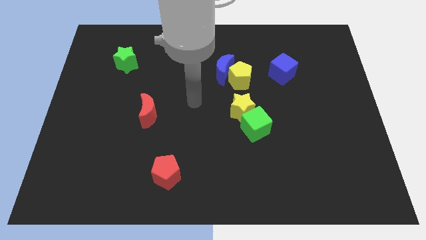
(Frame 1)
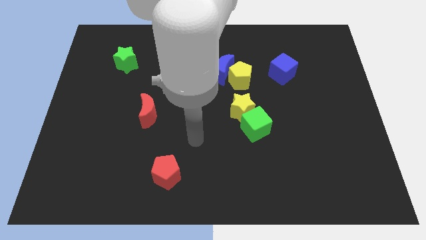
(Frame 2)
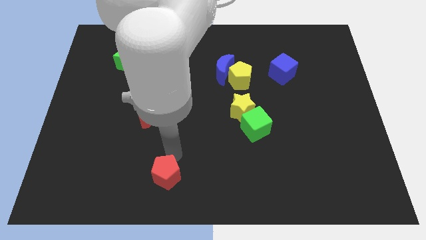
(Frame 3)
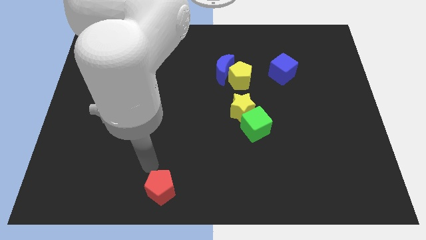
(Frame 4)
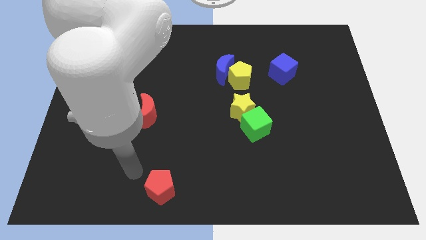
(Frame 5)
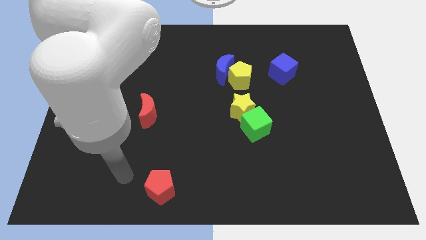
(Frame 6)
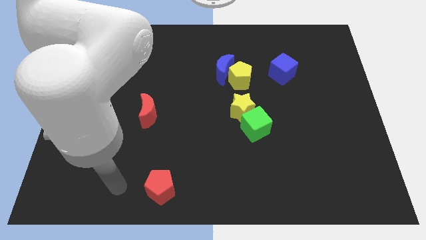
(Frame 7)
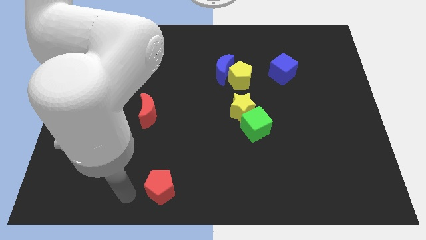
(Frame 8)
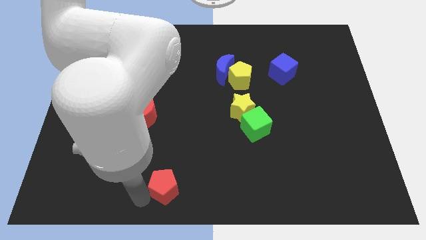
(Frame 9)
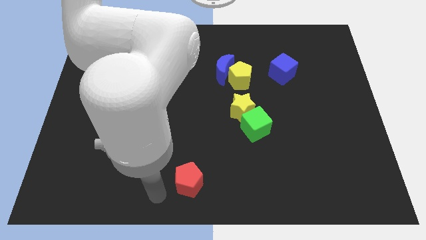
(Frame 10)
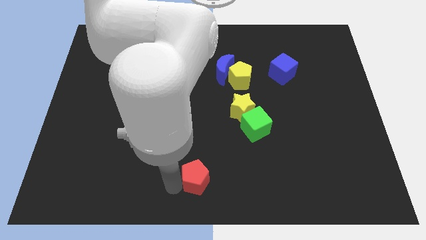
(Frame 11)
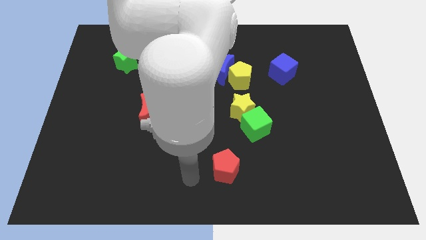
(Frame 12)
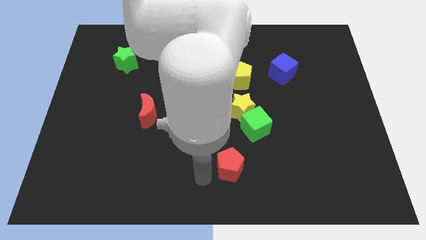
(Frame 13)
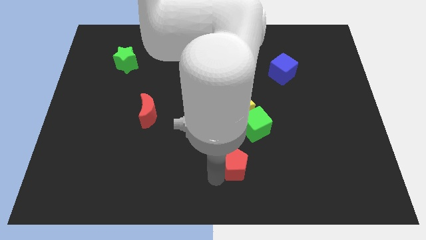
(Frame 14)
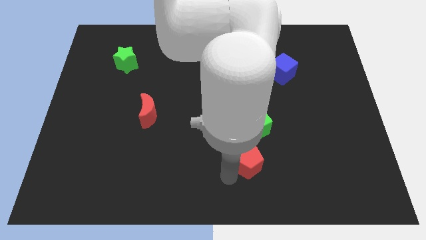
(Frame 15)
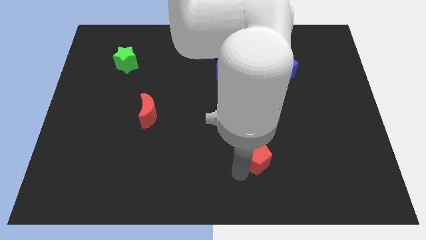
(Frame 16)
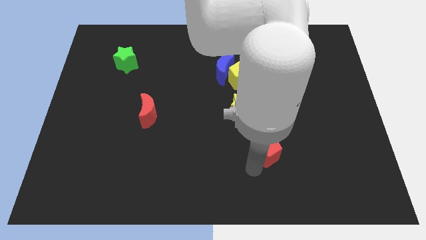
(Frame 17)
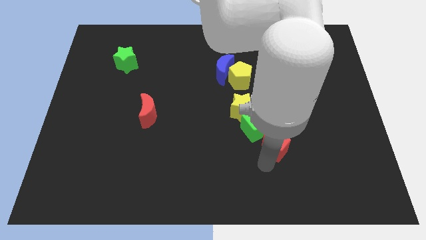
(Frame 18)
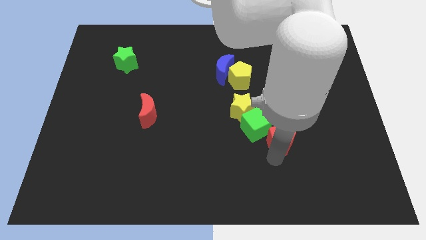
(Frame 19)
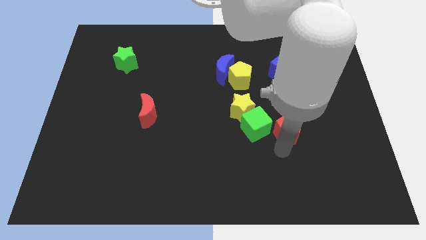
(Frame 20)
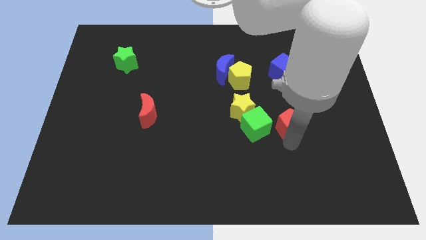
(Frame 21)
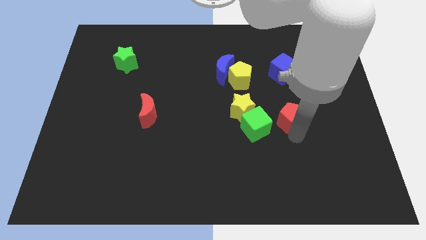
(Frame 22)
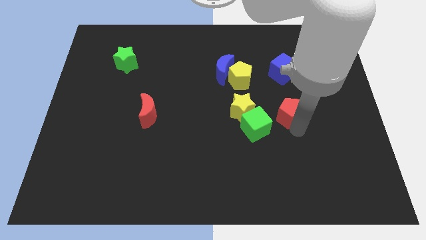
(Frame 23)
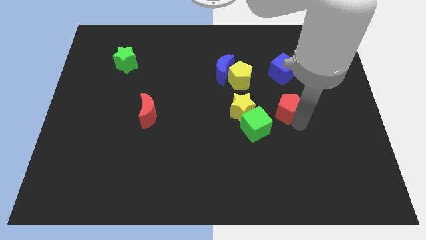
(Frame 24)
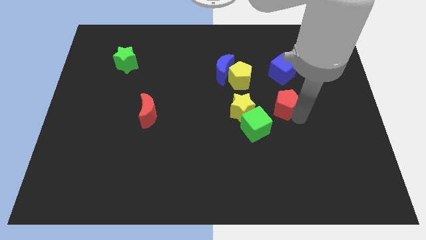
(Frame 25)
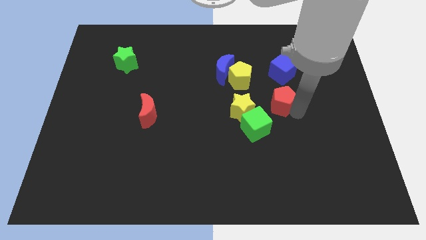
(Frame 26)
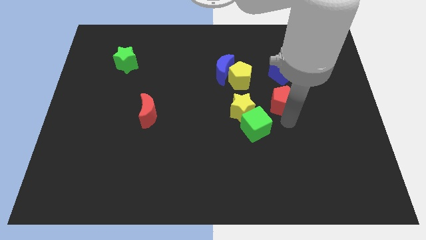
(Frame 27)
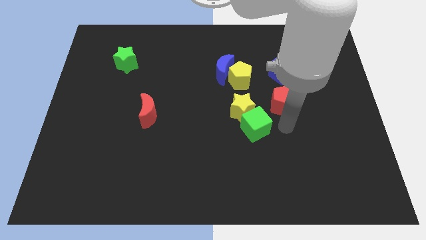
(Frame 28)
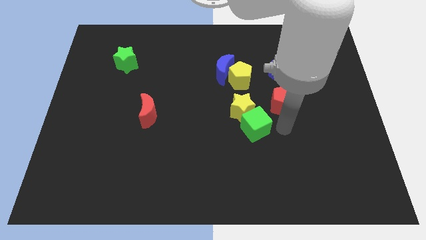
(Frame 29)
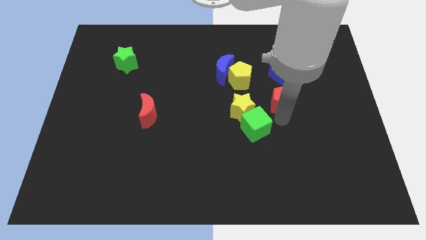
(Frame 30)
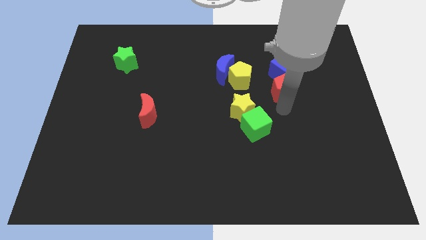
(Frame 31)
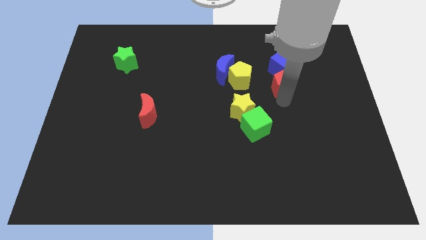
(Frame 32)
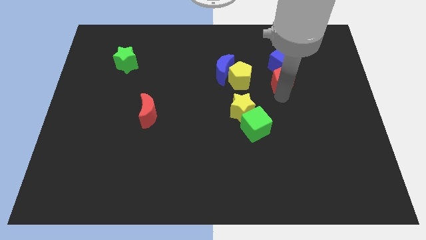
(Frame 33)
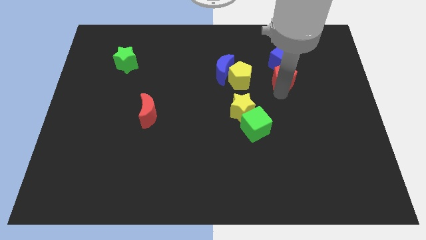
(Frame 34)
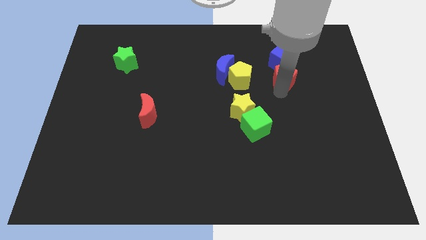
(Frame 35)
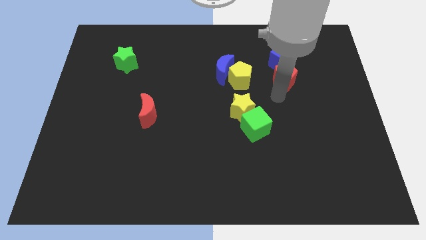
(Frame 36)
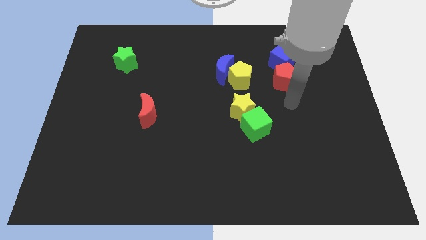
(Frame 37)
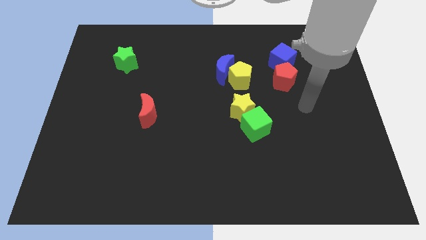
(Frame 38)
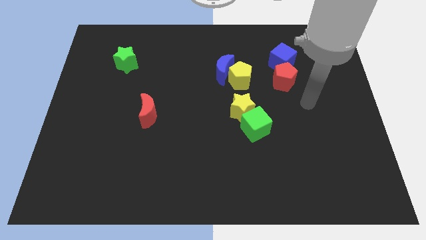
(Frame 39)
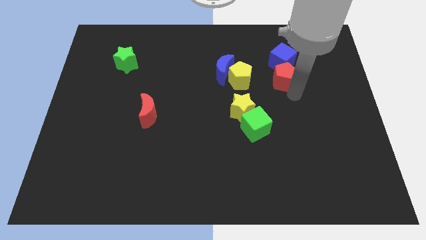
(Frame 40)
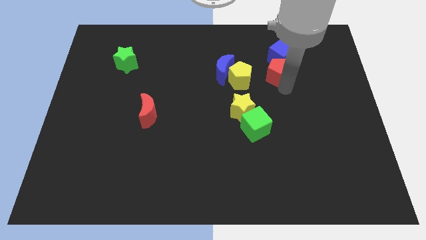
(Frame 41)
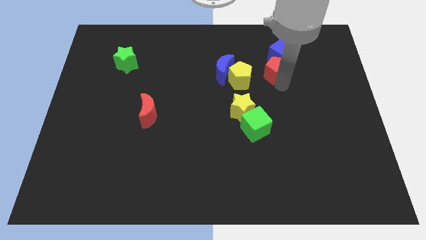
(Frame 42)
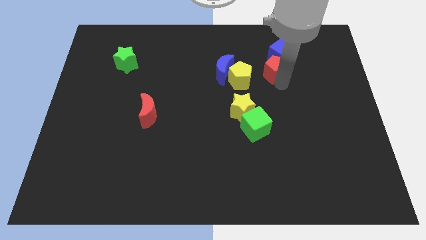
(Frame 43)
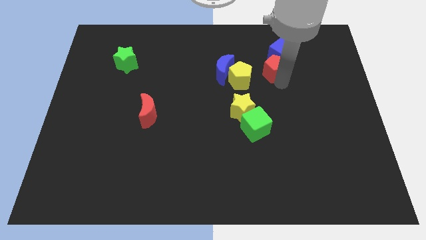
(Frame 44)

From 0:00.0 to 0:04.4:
slide the red pentagon close to the blue cube

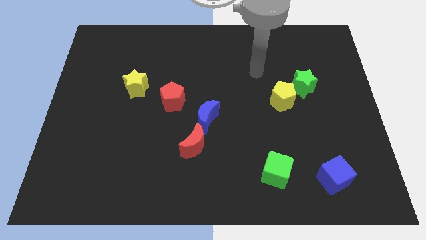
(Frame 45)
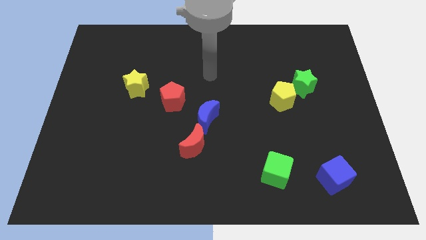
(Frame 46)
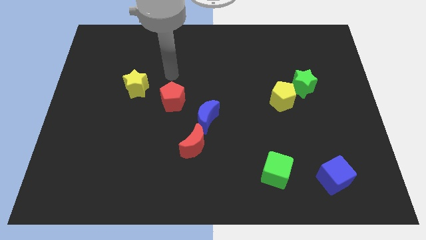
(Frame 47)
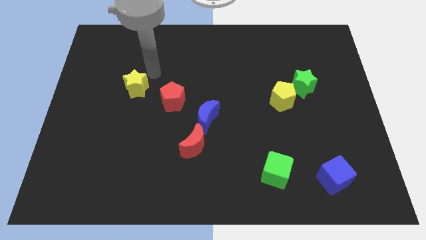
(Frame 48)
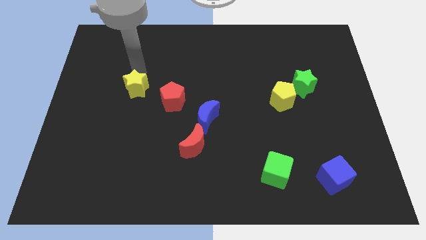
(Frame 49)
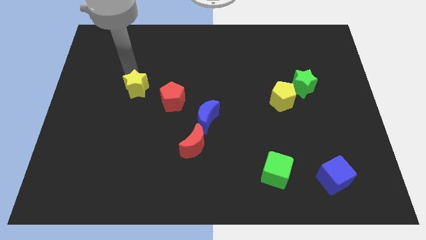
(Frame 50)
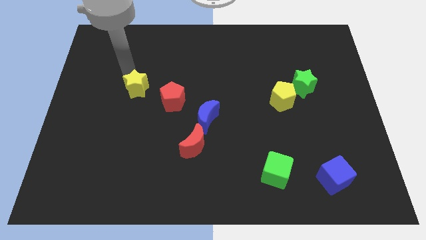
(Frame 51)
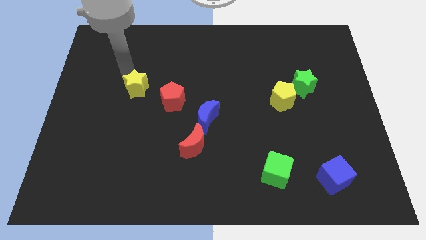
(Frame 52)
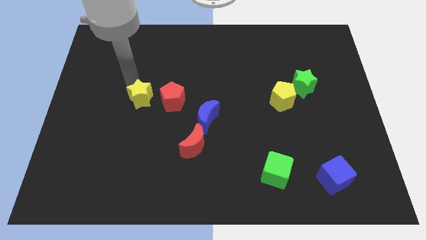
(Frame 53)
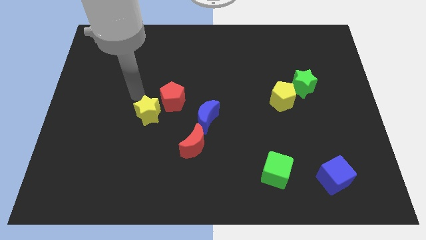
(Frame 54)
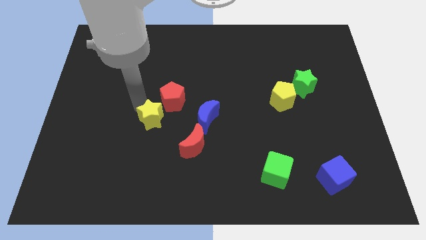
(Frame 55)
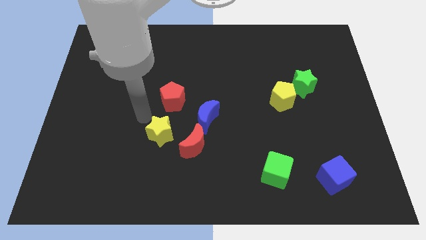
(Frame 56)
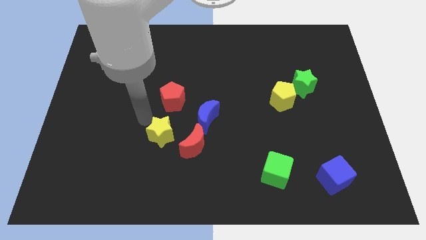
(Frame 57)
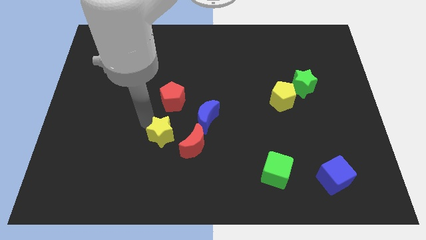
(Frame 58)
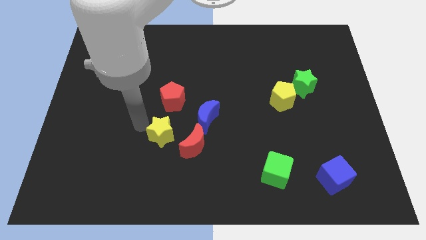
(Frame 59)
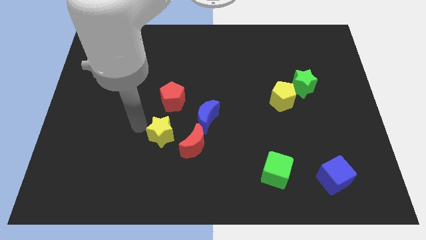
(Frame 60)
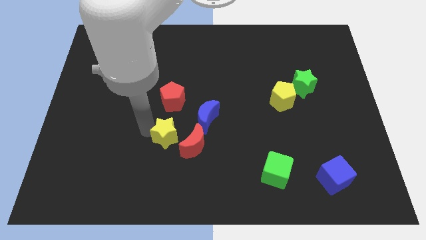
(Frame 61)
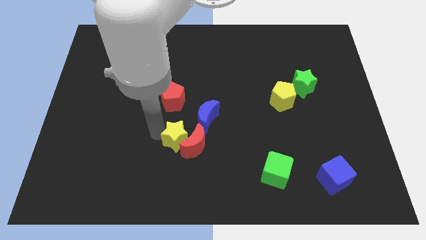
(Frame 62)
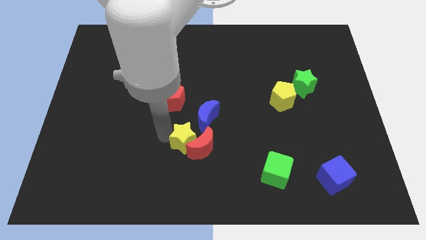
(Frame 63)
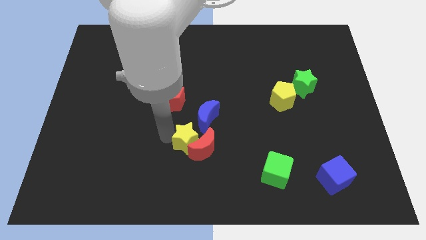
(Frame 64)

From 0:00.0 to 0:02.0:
move the yellow star next to the red moon

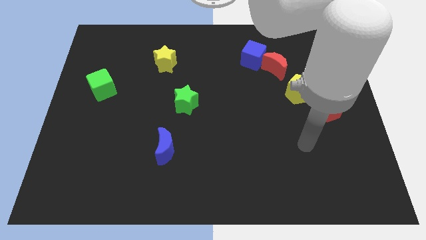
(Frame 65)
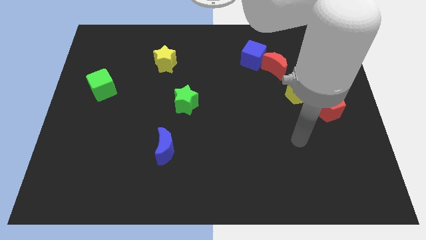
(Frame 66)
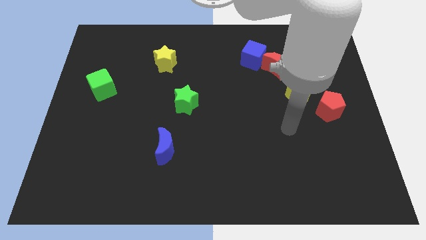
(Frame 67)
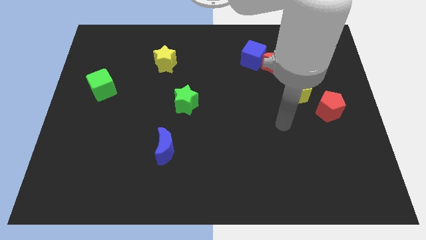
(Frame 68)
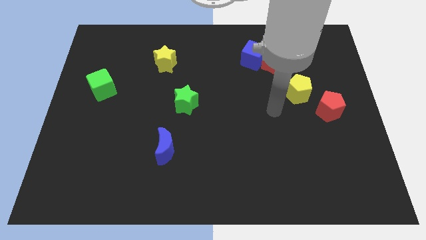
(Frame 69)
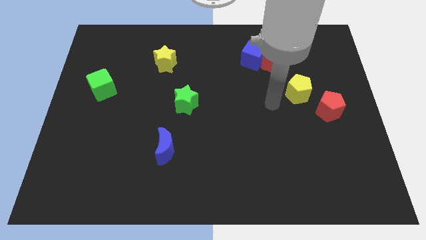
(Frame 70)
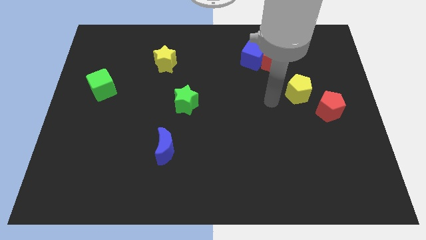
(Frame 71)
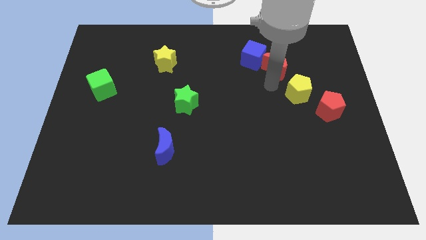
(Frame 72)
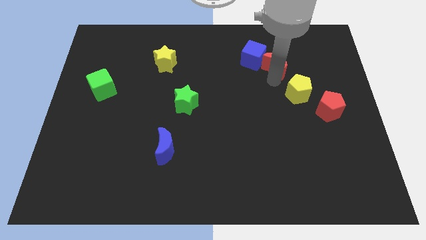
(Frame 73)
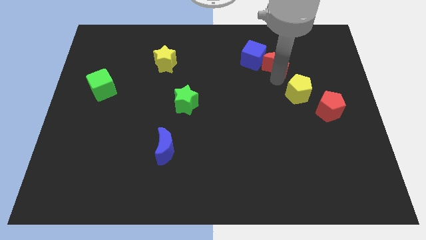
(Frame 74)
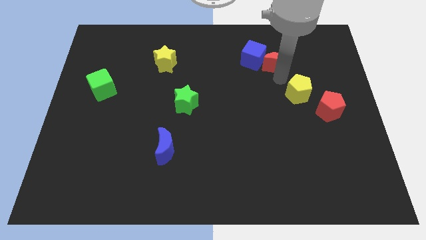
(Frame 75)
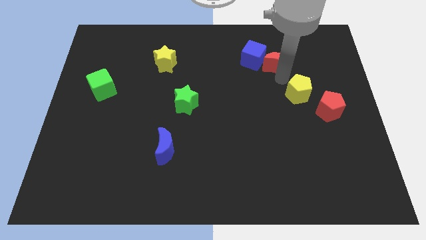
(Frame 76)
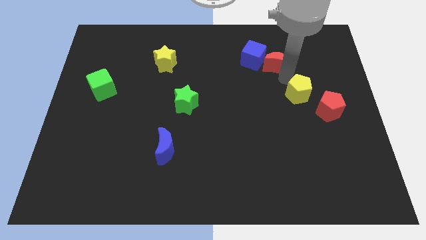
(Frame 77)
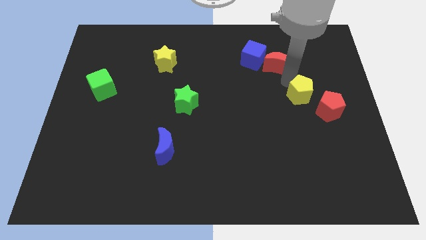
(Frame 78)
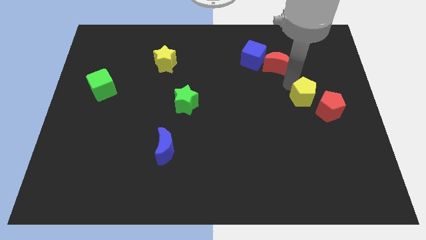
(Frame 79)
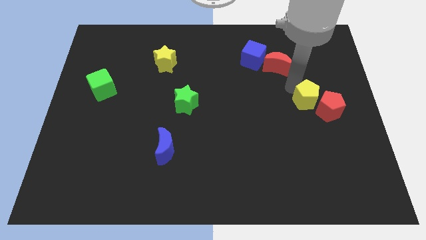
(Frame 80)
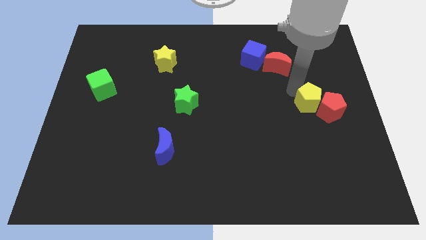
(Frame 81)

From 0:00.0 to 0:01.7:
move the yellow pentagon next to the red pentagon

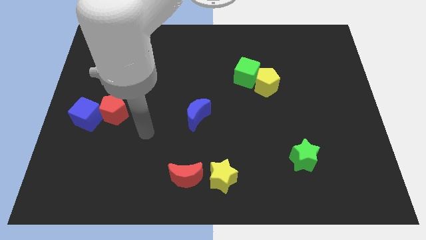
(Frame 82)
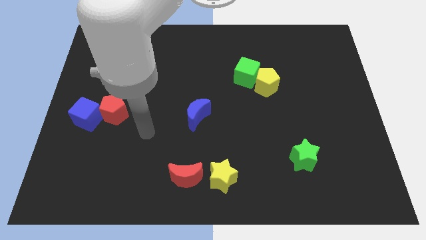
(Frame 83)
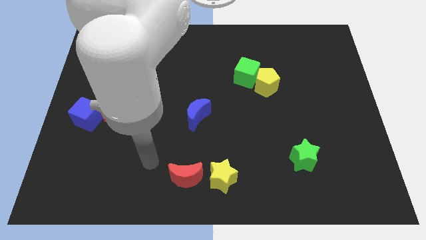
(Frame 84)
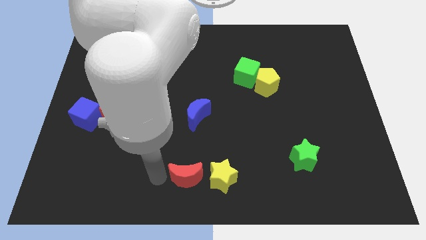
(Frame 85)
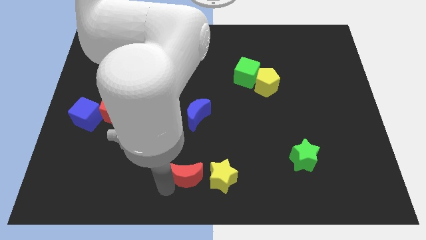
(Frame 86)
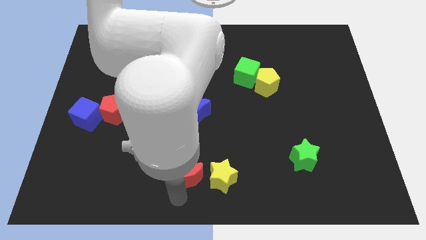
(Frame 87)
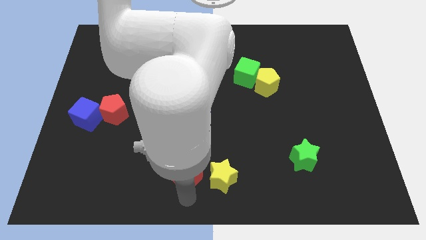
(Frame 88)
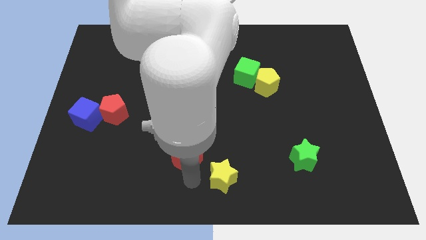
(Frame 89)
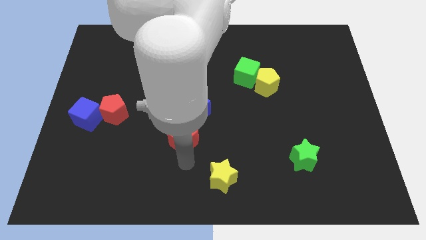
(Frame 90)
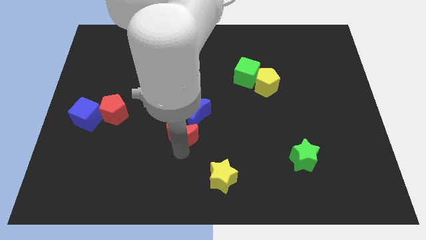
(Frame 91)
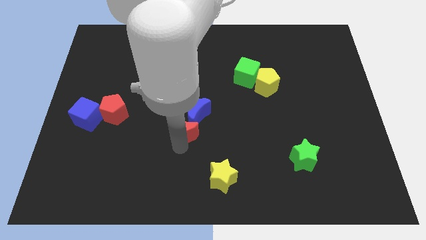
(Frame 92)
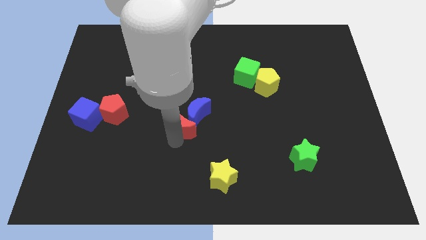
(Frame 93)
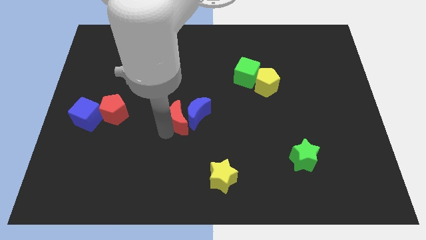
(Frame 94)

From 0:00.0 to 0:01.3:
push the red moon next to the blue moon
